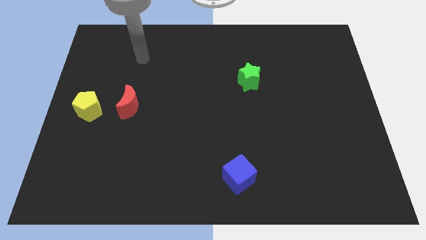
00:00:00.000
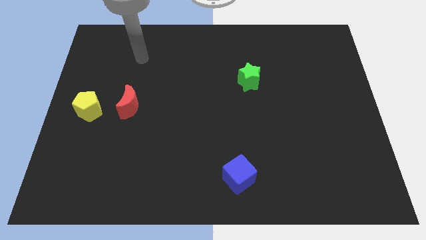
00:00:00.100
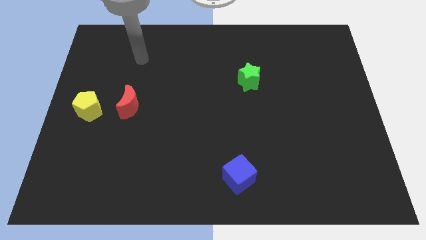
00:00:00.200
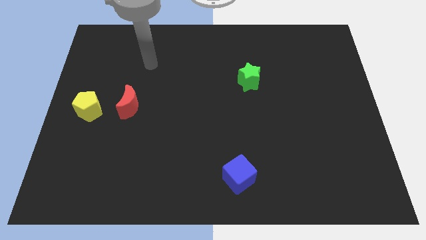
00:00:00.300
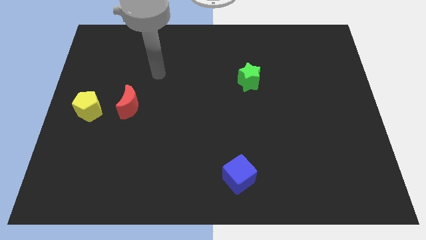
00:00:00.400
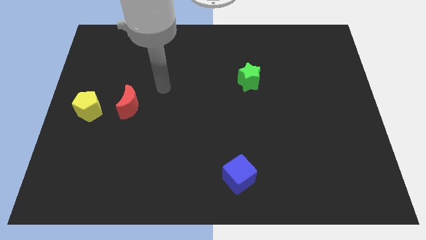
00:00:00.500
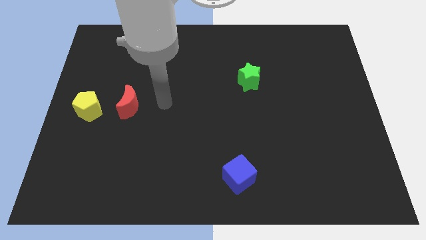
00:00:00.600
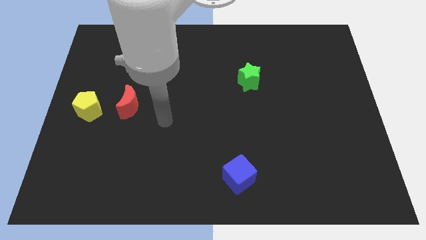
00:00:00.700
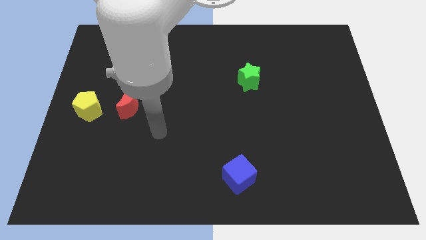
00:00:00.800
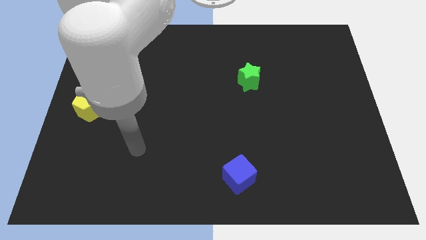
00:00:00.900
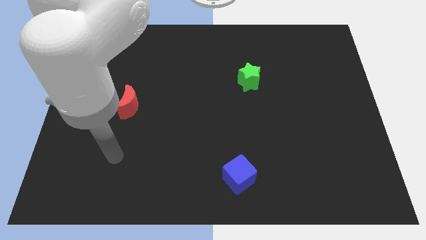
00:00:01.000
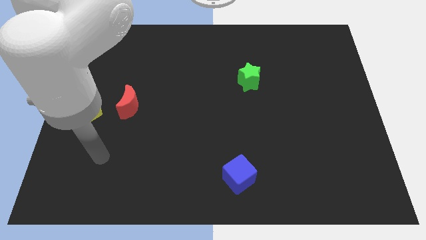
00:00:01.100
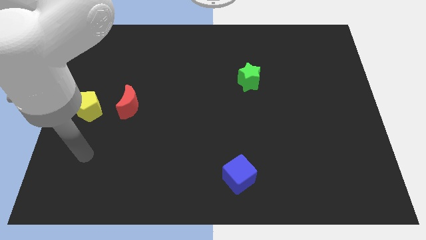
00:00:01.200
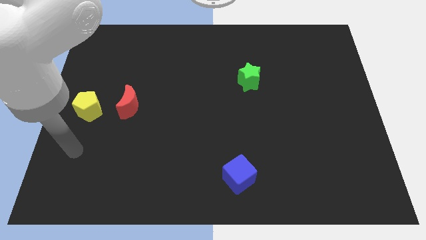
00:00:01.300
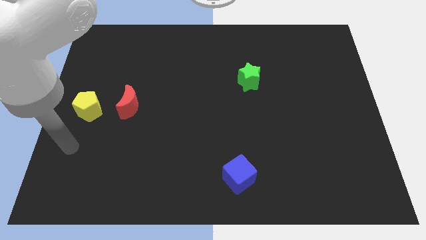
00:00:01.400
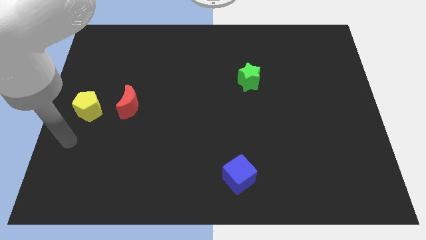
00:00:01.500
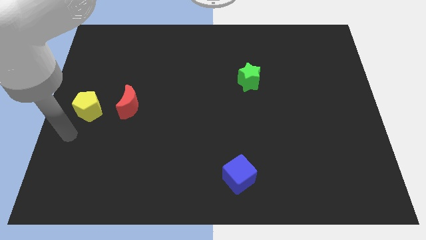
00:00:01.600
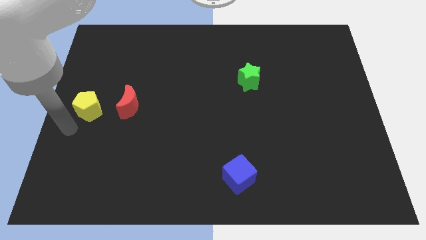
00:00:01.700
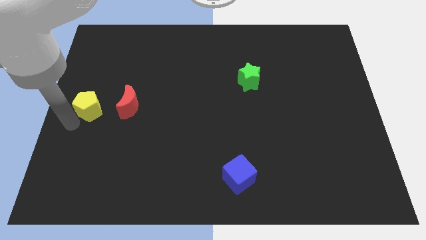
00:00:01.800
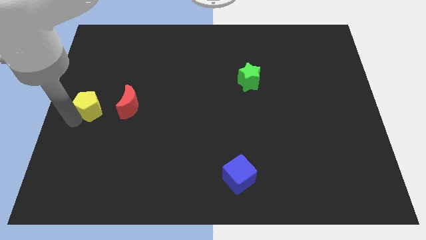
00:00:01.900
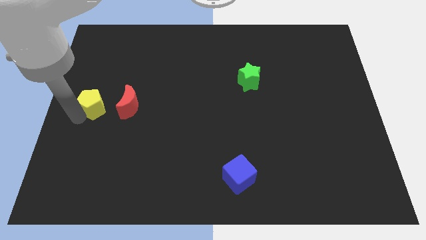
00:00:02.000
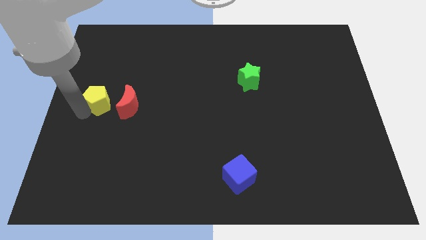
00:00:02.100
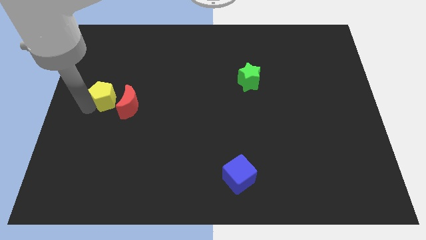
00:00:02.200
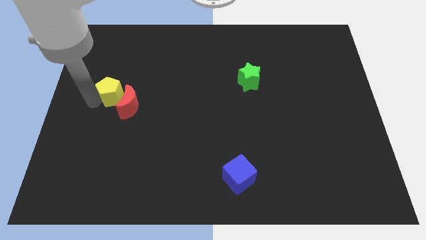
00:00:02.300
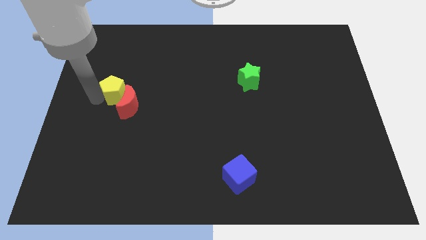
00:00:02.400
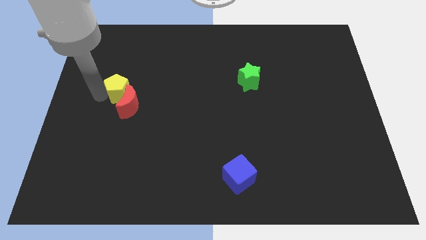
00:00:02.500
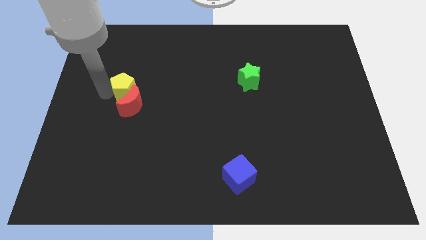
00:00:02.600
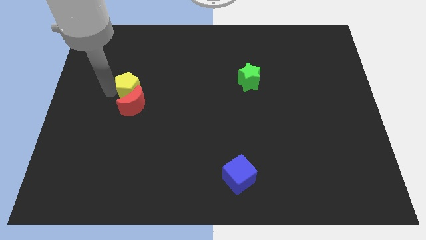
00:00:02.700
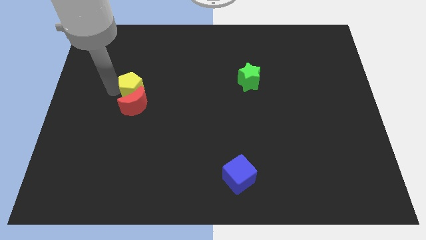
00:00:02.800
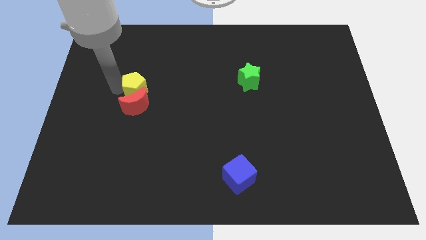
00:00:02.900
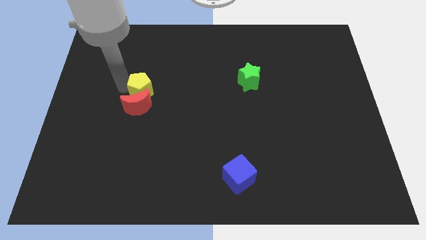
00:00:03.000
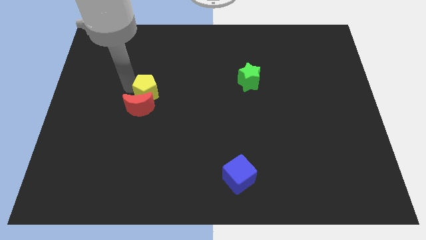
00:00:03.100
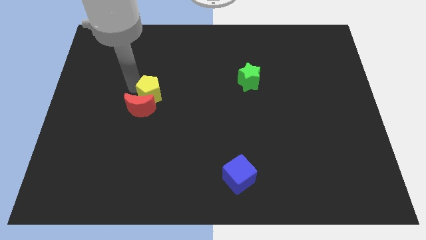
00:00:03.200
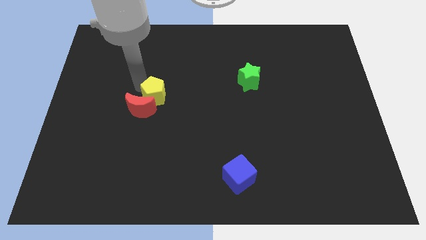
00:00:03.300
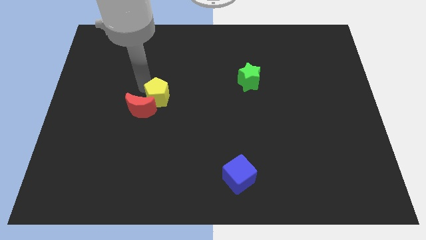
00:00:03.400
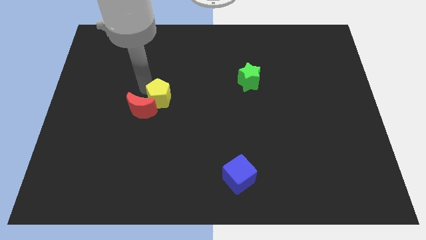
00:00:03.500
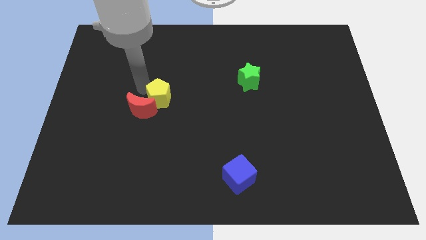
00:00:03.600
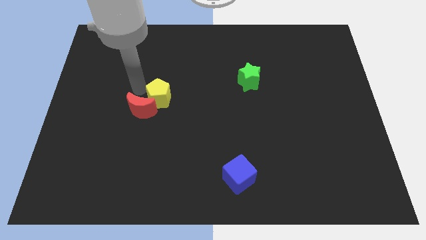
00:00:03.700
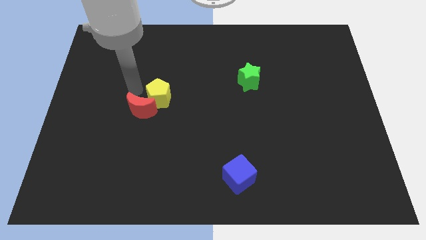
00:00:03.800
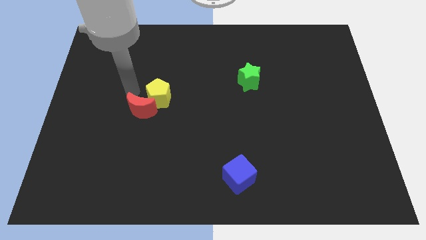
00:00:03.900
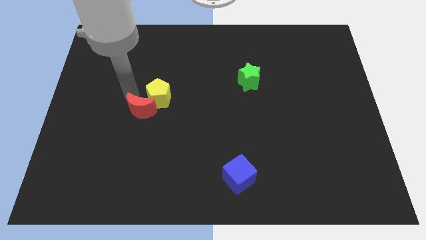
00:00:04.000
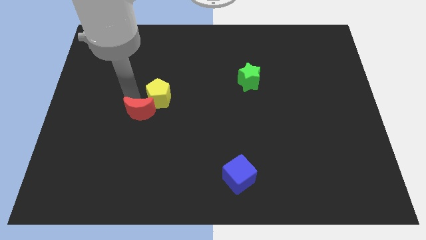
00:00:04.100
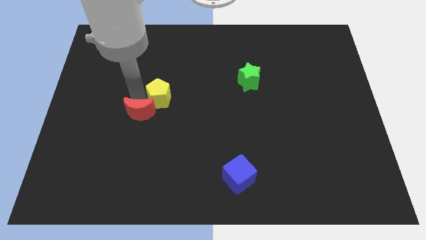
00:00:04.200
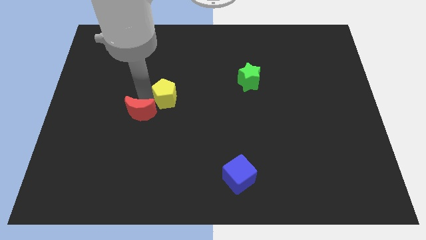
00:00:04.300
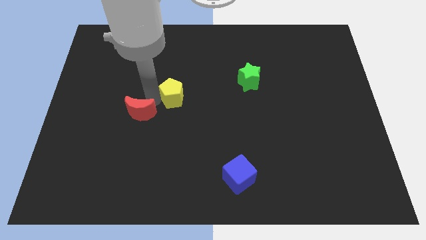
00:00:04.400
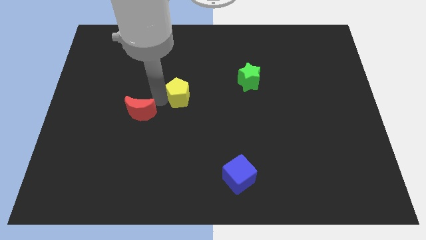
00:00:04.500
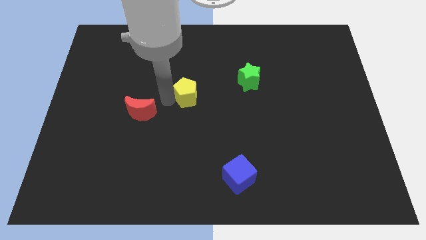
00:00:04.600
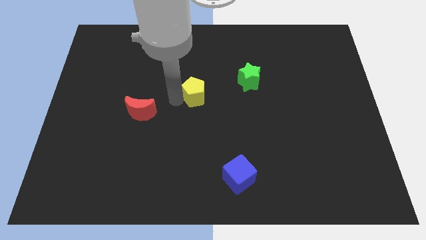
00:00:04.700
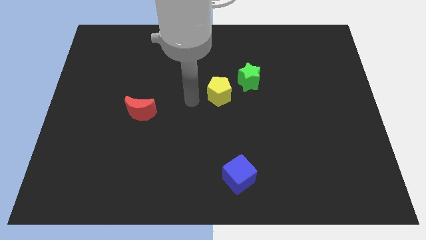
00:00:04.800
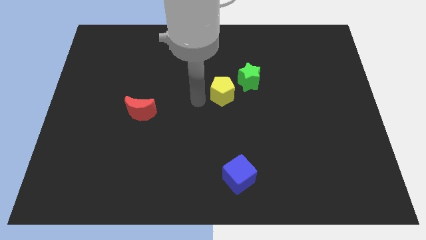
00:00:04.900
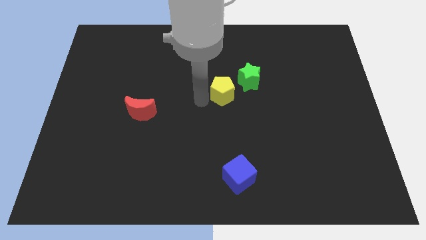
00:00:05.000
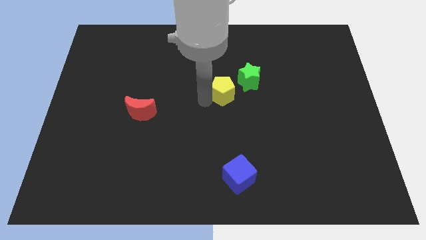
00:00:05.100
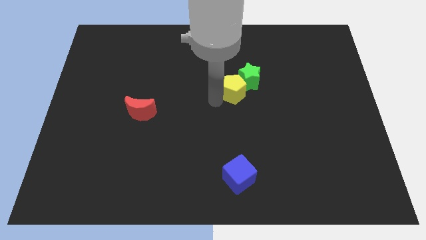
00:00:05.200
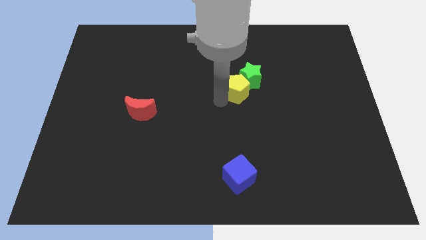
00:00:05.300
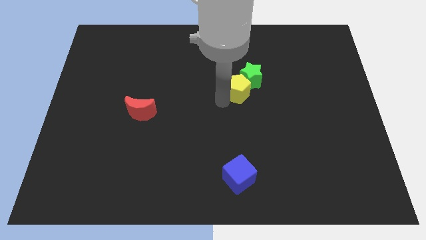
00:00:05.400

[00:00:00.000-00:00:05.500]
put the yellow block close to the star

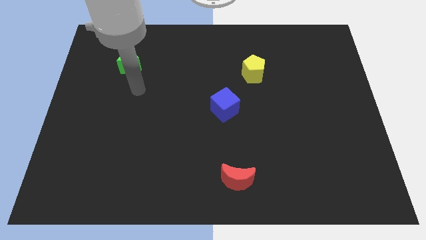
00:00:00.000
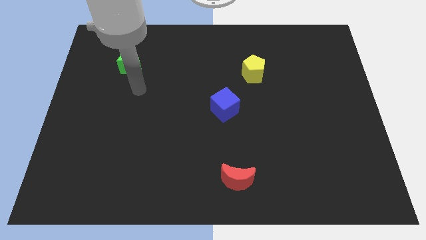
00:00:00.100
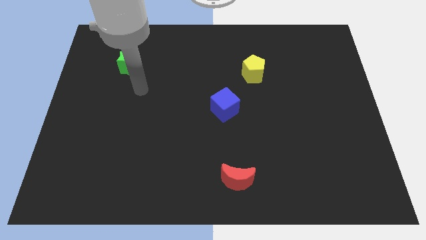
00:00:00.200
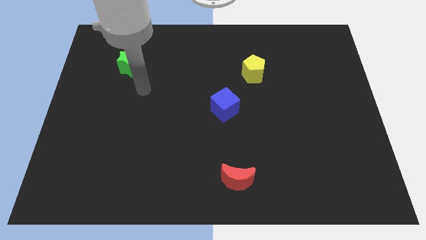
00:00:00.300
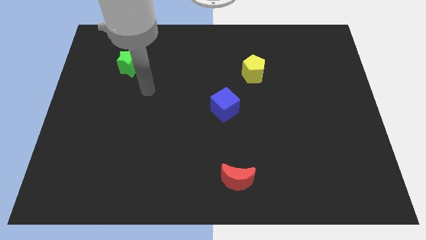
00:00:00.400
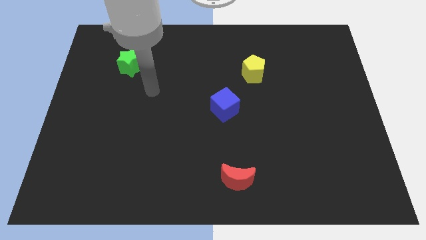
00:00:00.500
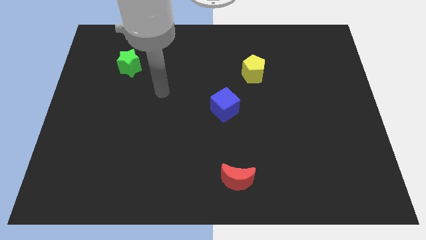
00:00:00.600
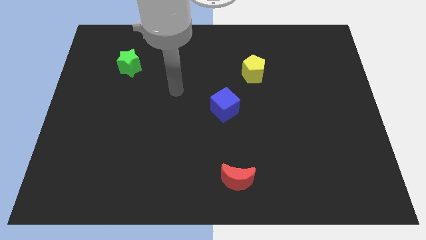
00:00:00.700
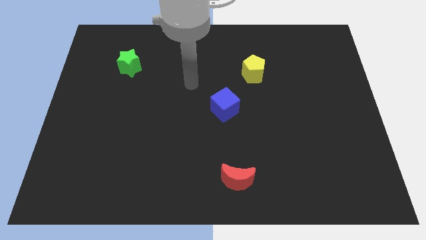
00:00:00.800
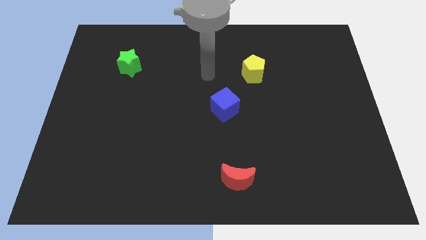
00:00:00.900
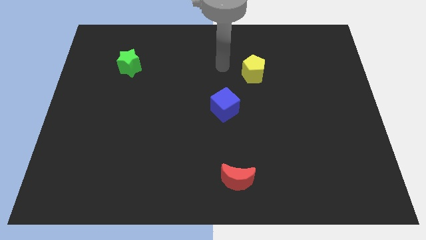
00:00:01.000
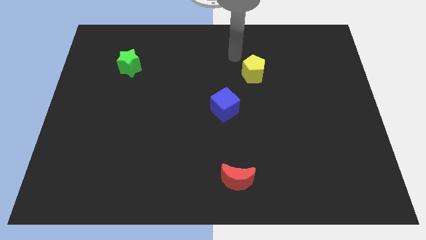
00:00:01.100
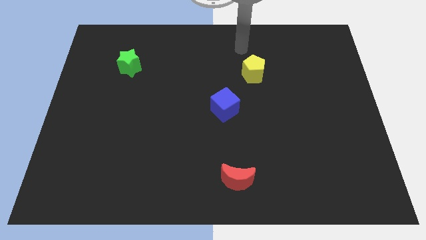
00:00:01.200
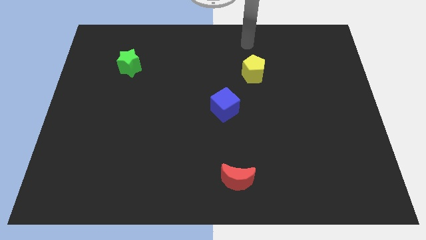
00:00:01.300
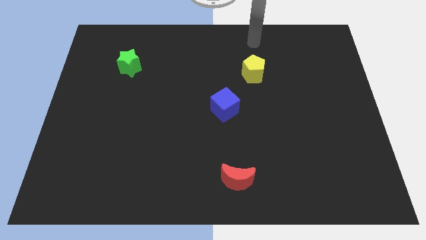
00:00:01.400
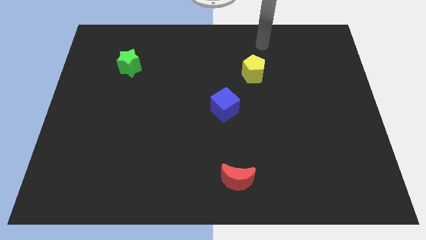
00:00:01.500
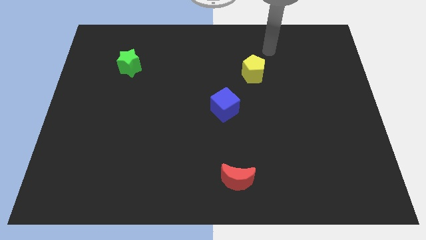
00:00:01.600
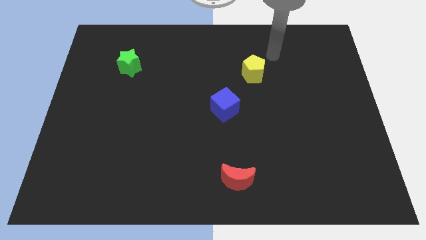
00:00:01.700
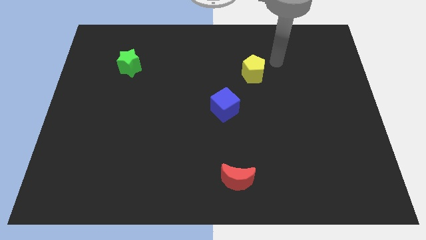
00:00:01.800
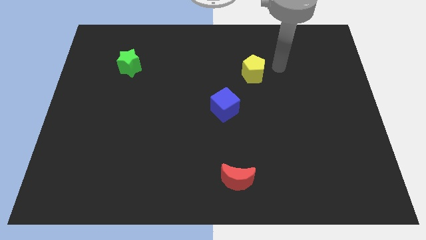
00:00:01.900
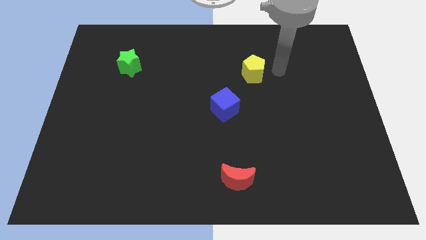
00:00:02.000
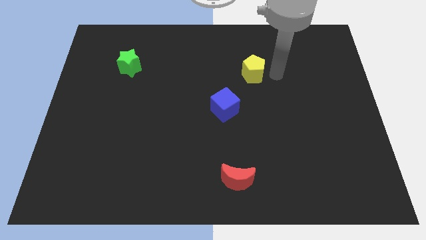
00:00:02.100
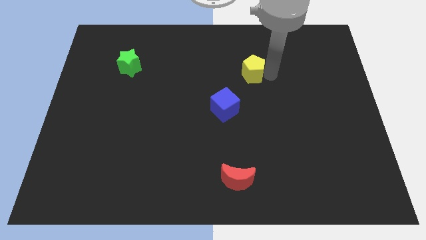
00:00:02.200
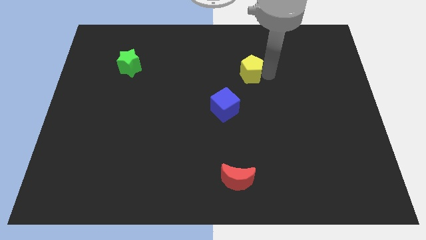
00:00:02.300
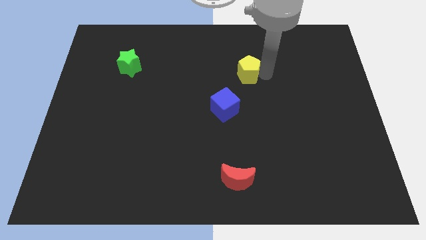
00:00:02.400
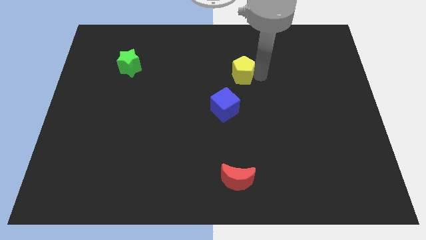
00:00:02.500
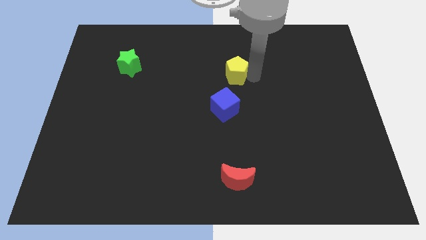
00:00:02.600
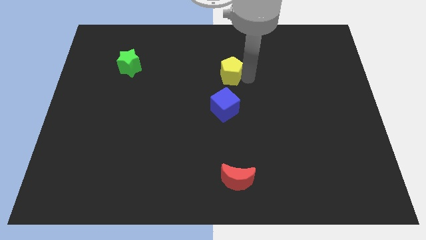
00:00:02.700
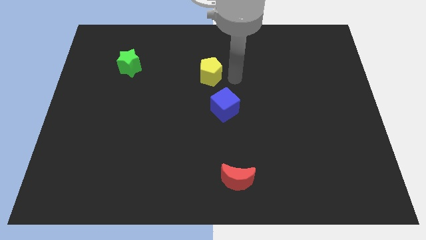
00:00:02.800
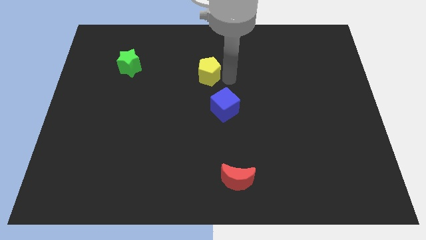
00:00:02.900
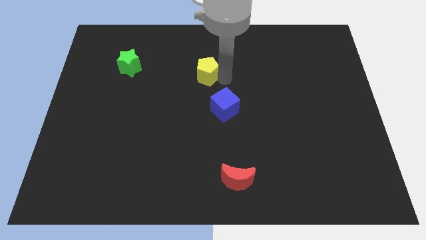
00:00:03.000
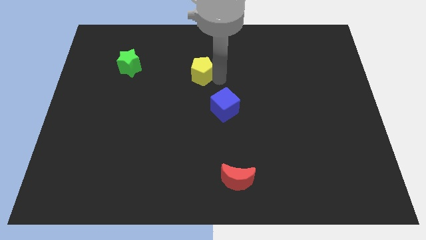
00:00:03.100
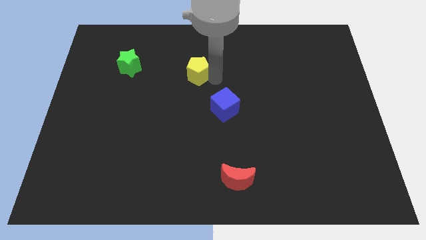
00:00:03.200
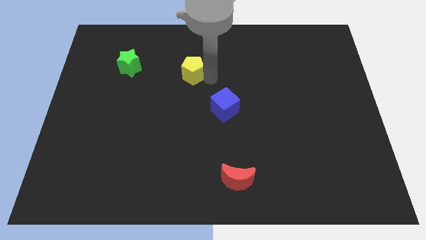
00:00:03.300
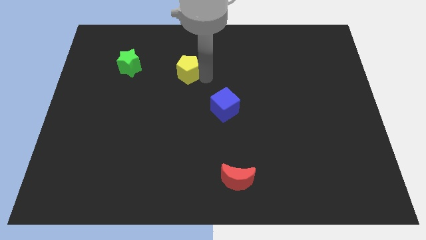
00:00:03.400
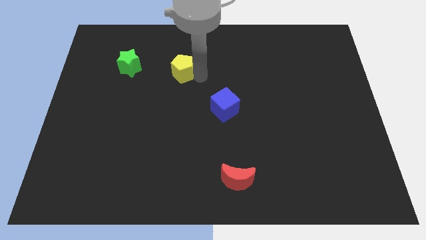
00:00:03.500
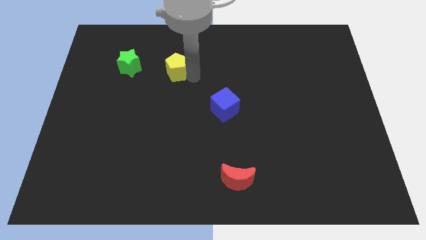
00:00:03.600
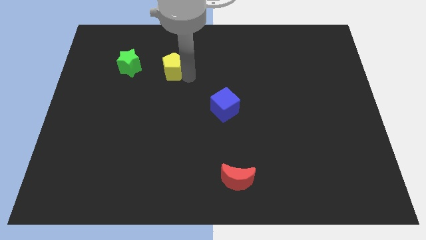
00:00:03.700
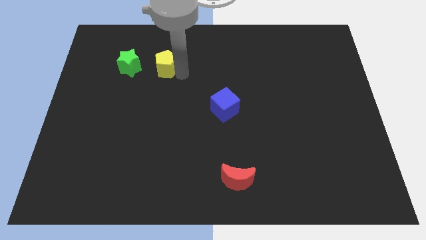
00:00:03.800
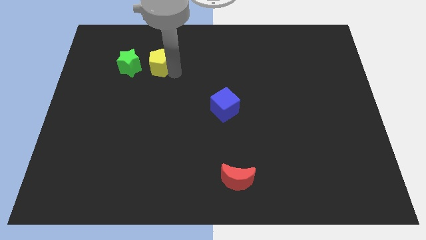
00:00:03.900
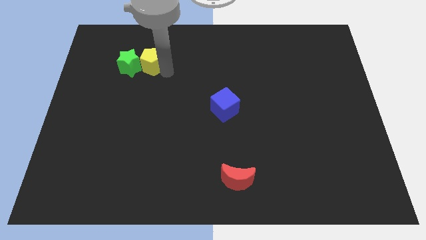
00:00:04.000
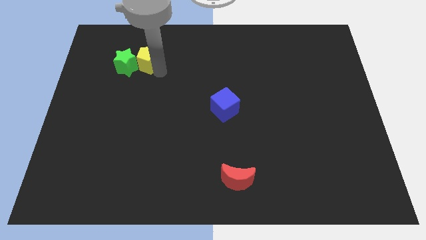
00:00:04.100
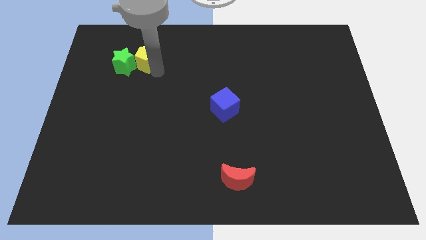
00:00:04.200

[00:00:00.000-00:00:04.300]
put the yellow pentagon towards the green block
